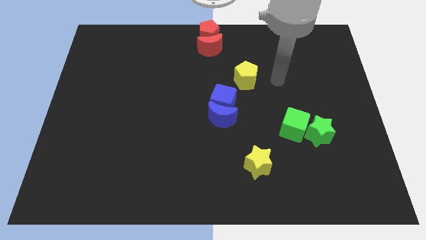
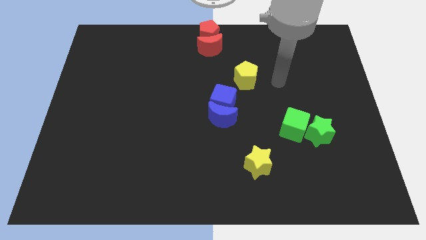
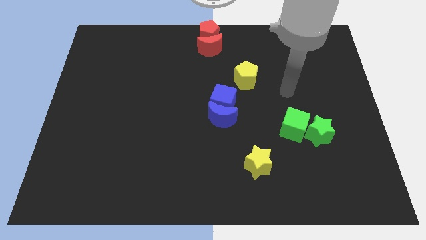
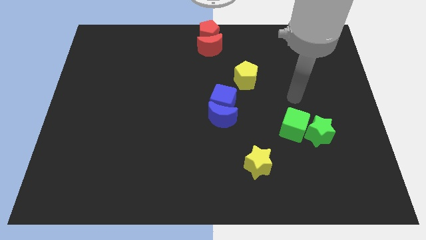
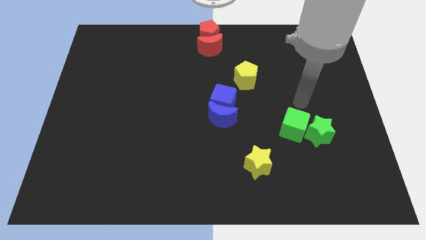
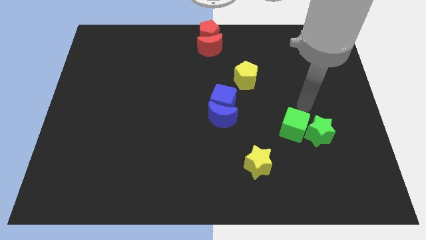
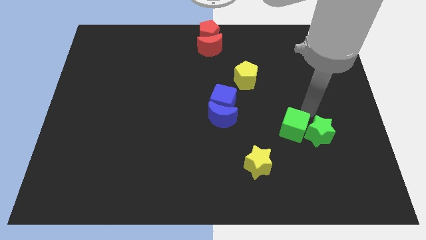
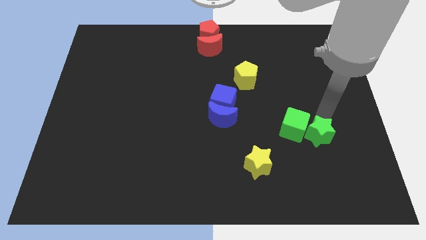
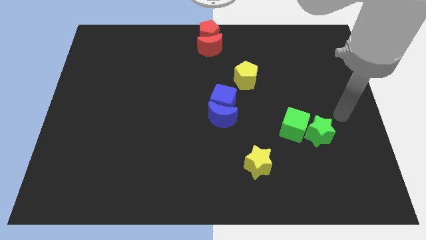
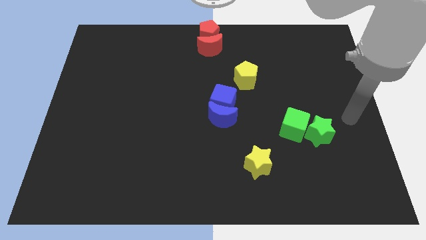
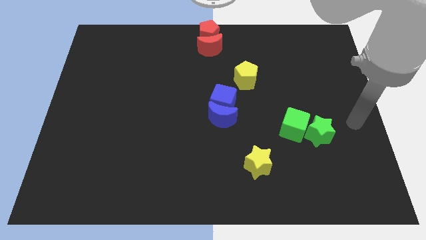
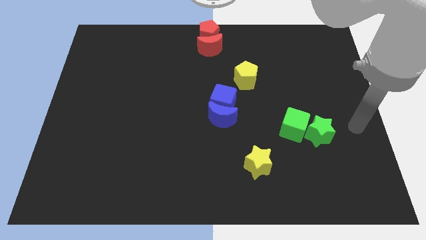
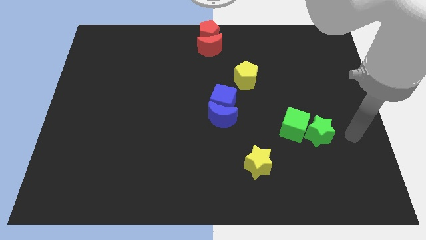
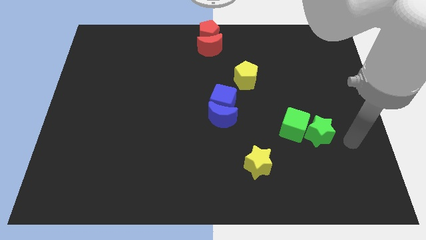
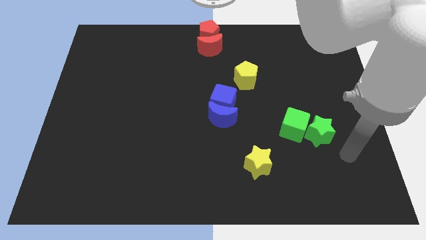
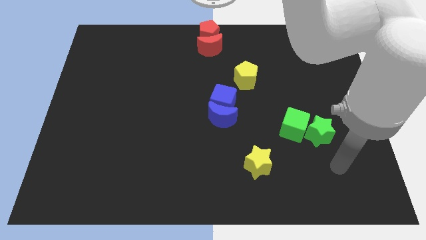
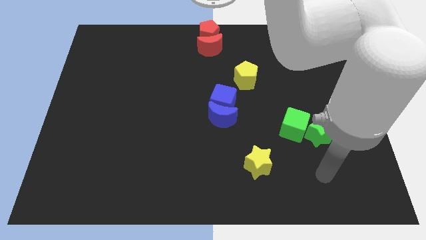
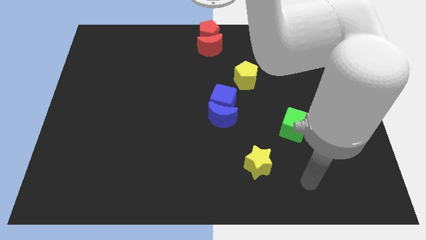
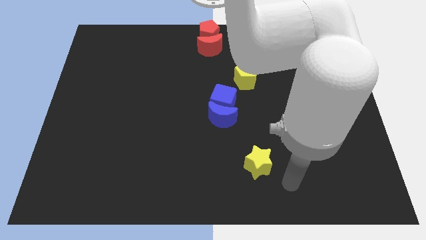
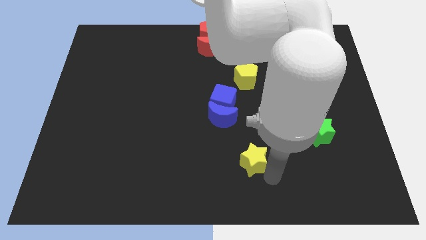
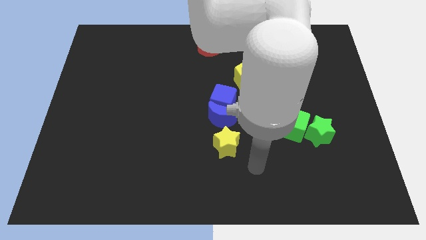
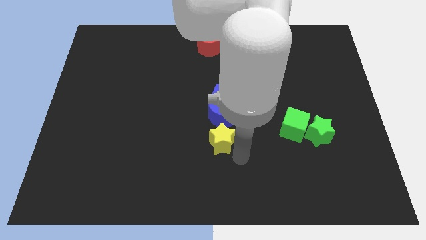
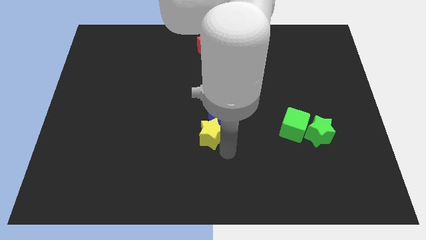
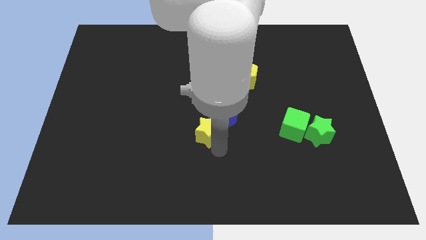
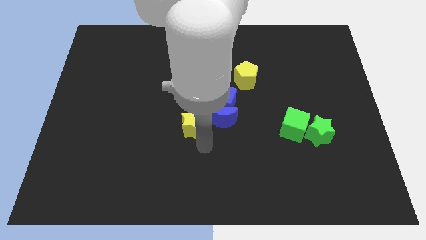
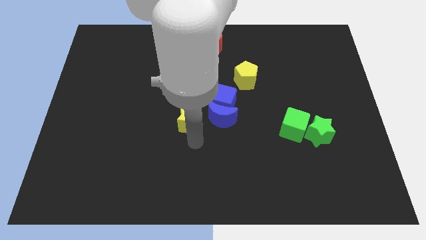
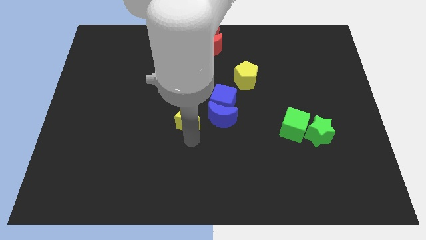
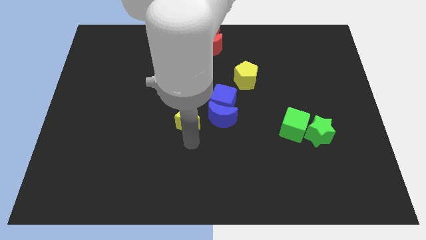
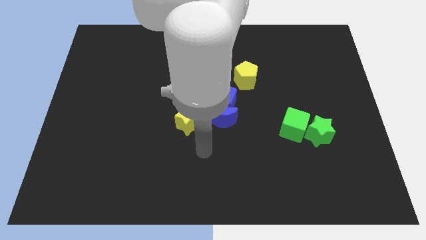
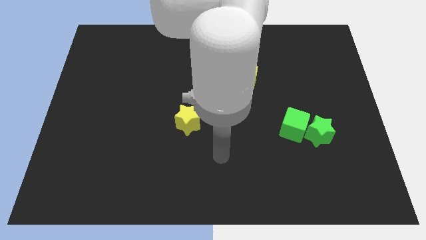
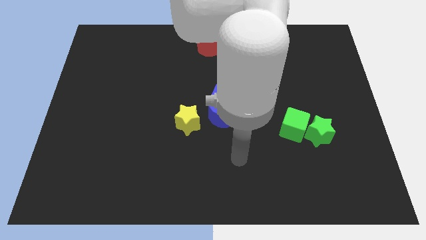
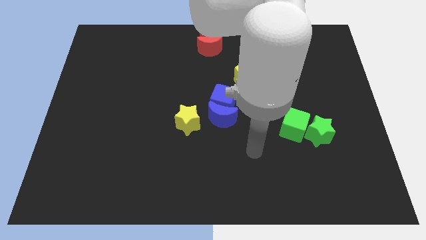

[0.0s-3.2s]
put the yellow star to the left side of blue moon

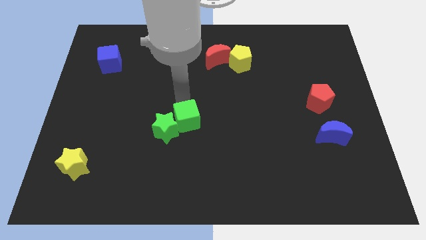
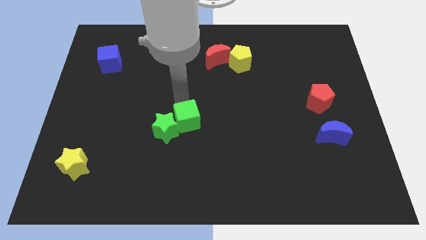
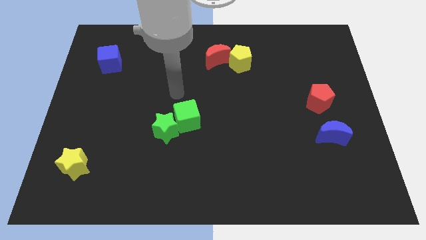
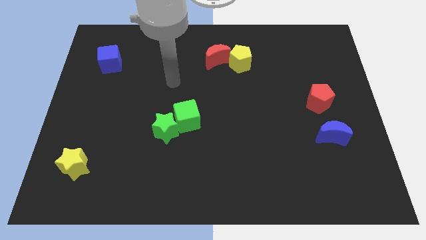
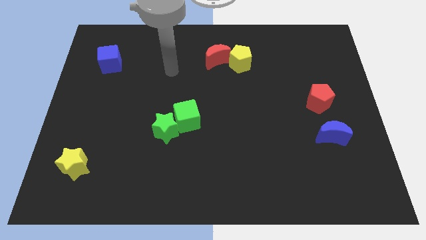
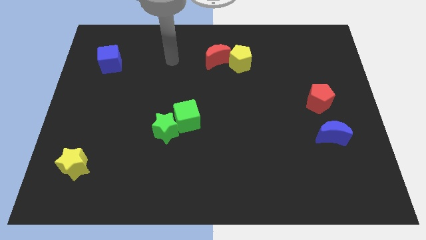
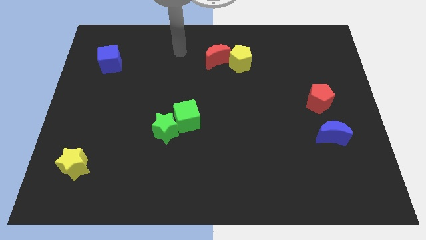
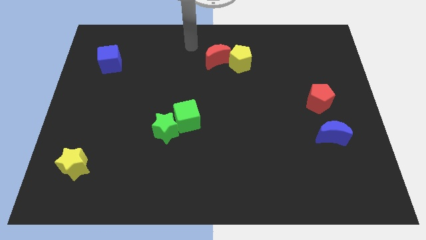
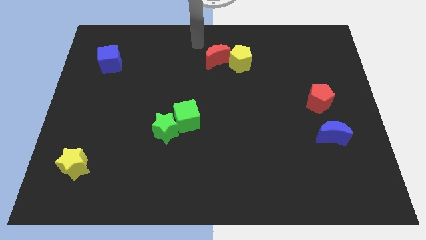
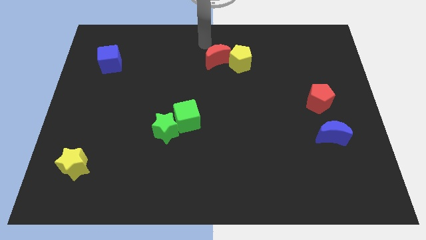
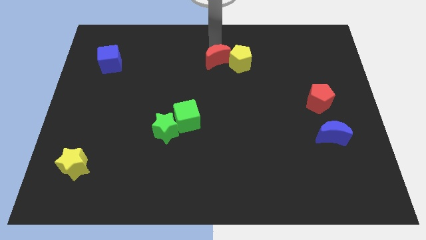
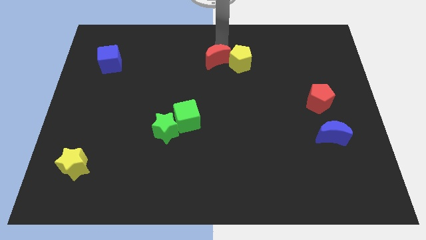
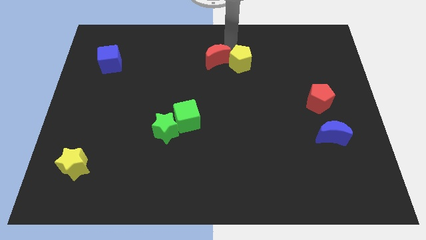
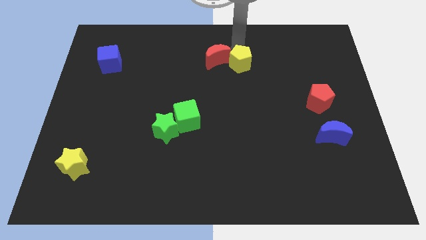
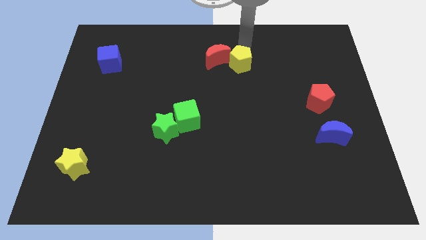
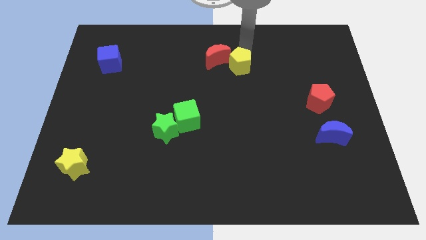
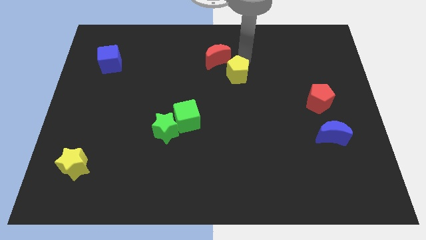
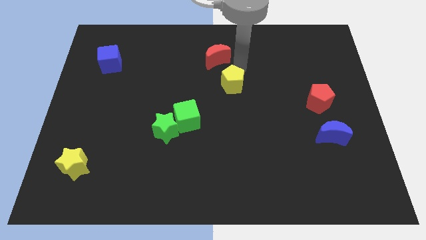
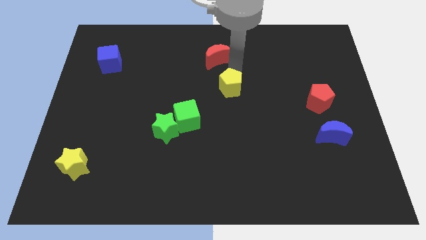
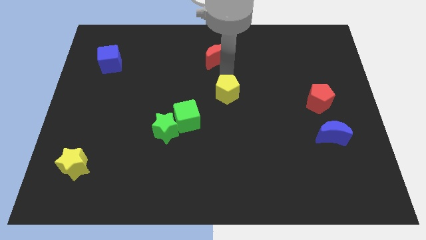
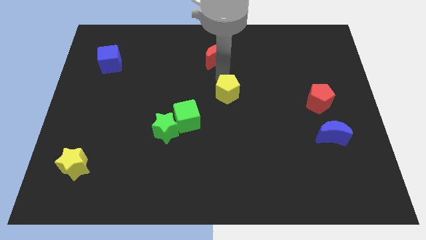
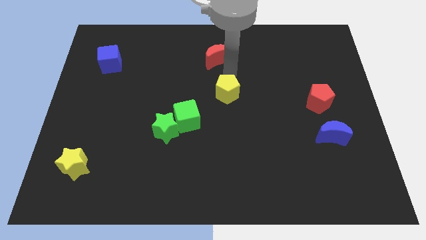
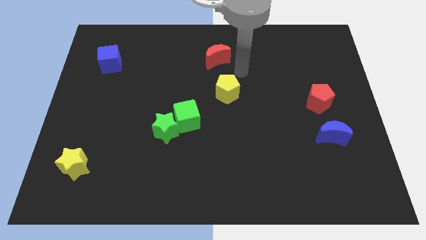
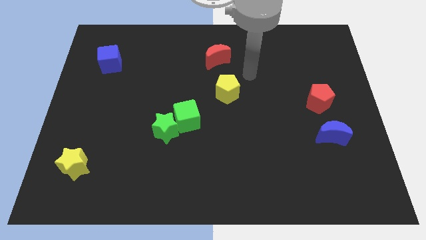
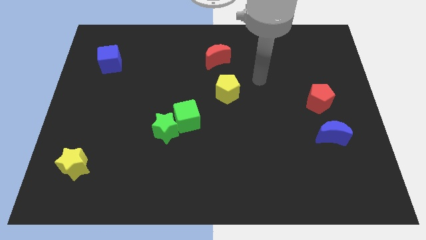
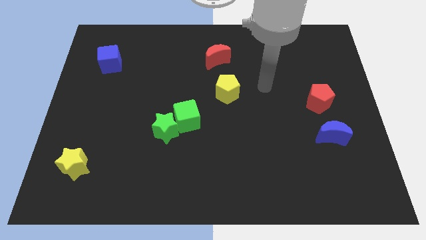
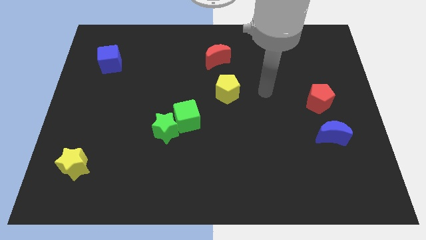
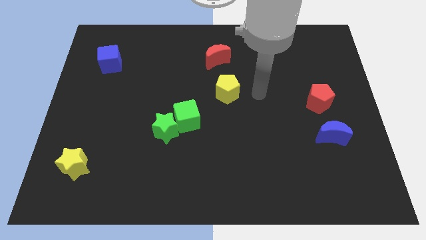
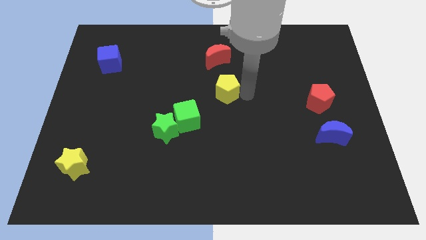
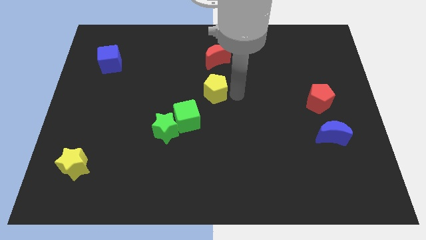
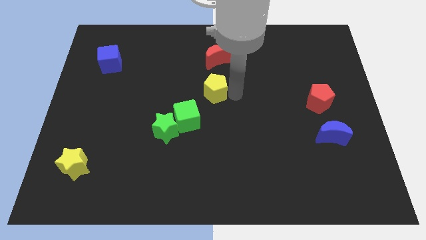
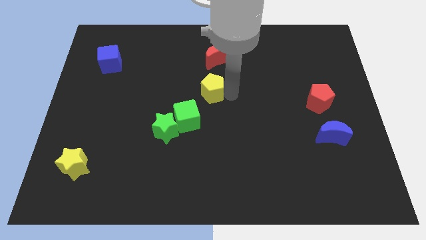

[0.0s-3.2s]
move your arm away from the green cube

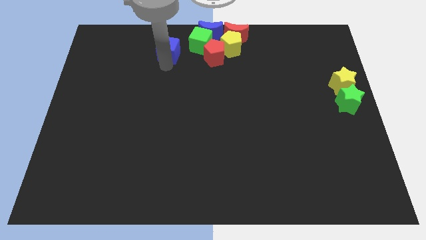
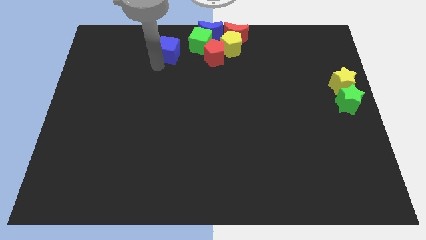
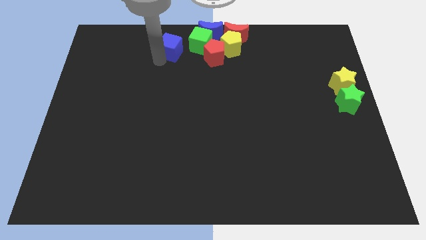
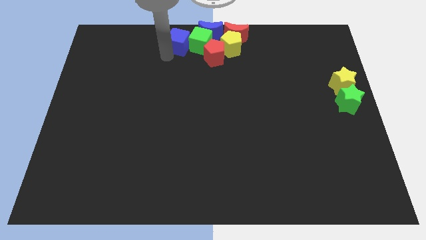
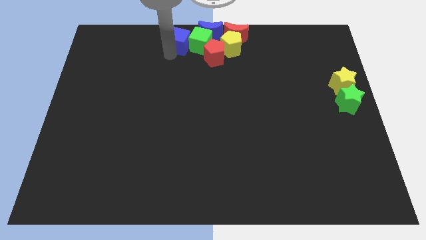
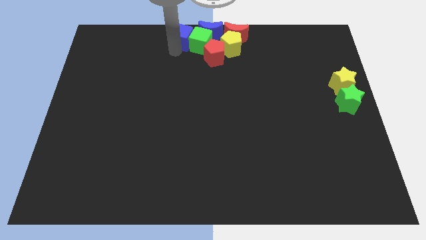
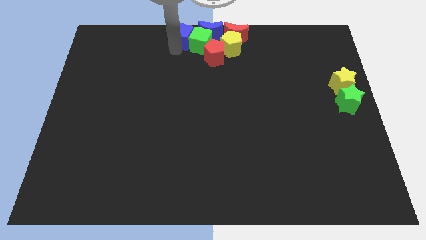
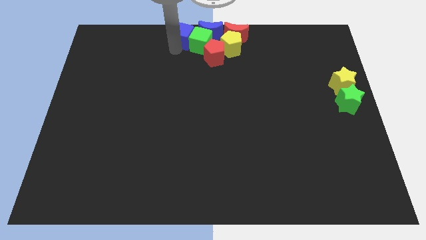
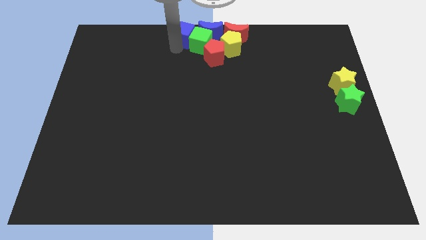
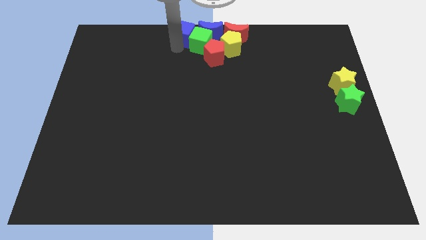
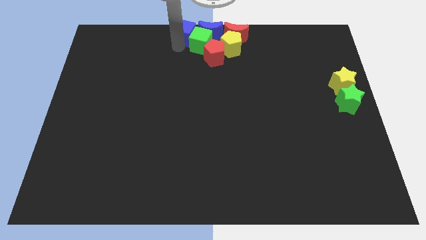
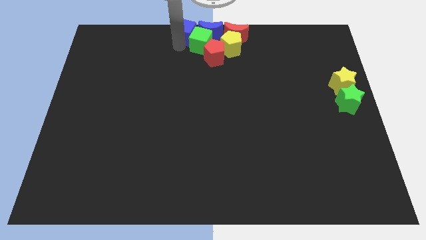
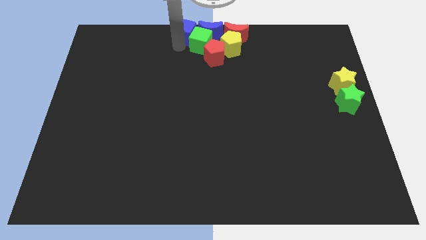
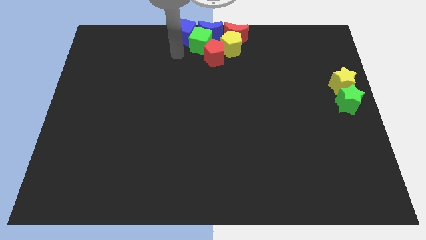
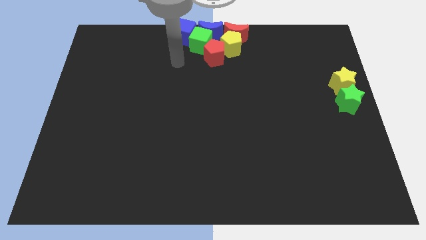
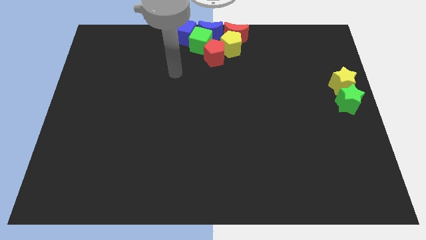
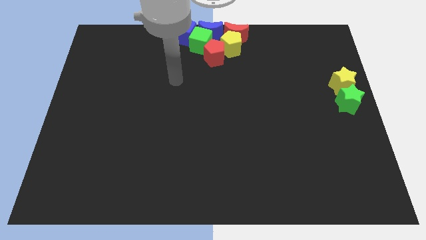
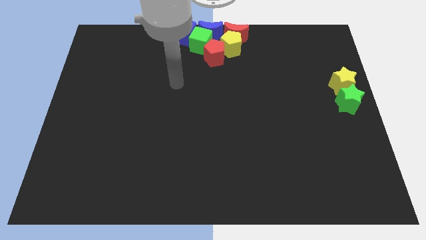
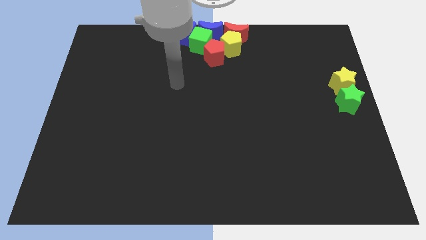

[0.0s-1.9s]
move the blue cube to the left side of the blue crescent

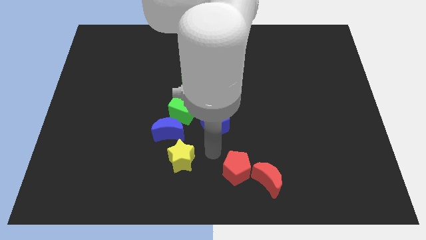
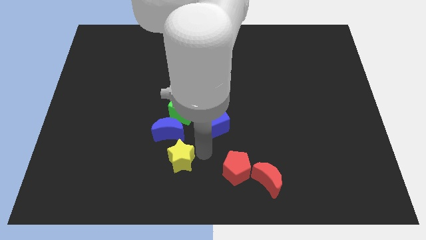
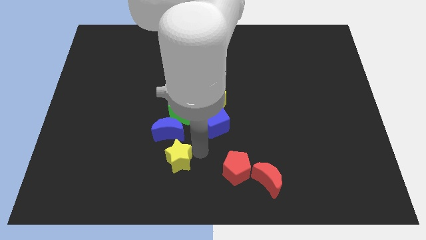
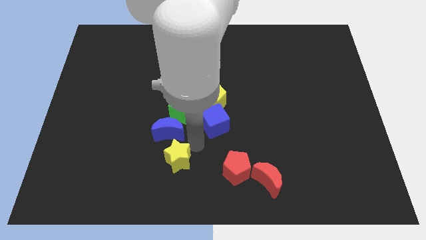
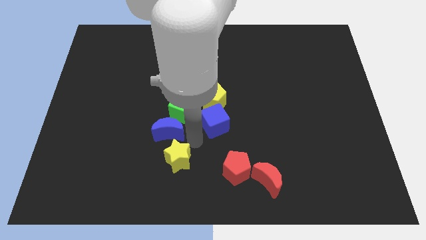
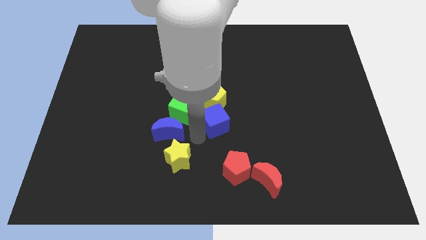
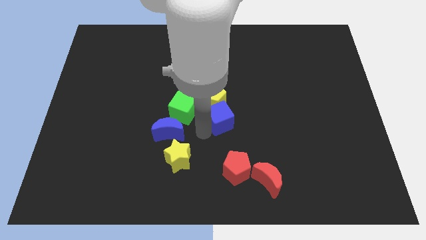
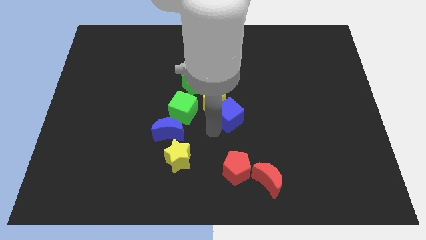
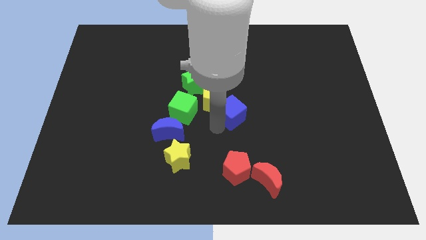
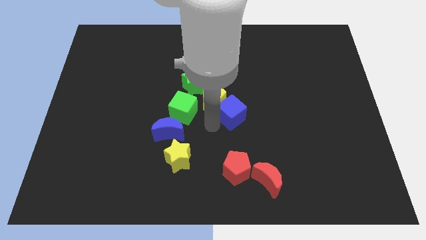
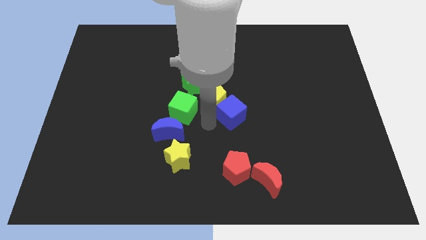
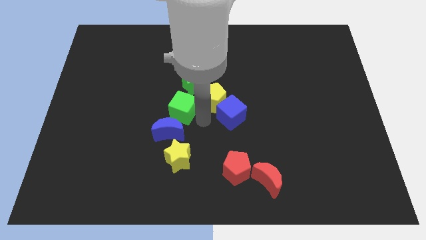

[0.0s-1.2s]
push the blue cube to the bottom right of the yellow pentagon
